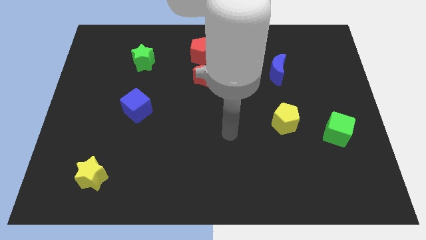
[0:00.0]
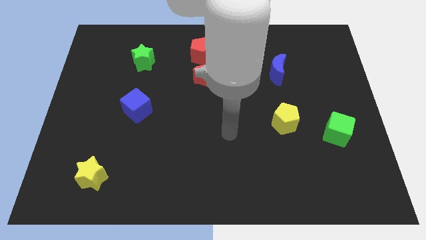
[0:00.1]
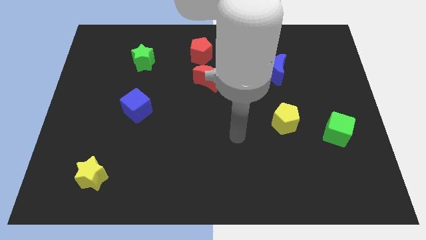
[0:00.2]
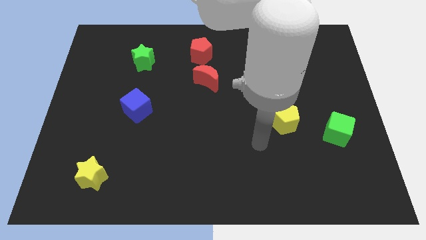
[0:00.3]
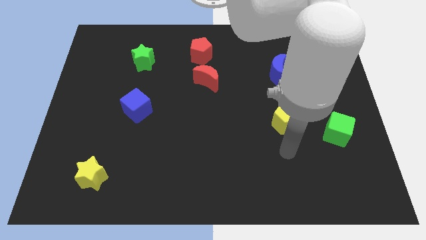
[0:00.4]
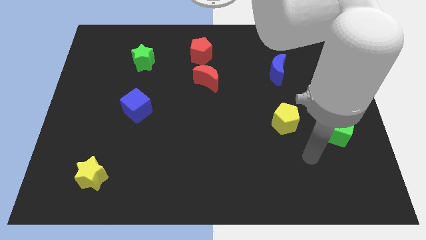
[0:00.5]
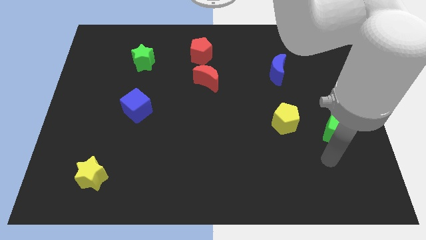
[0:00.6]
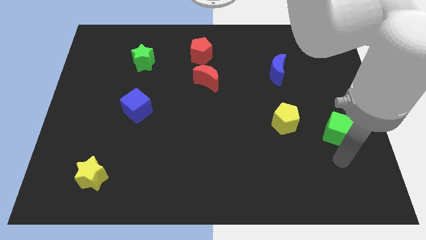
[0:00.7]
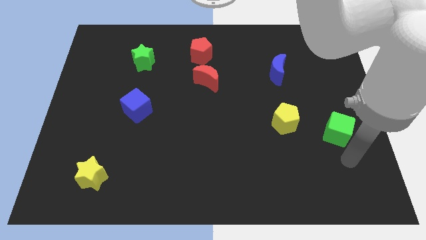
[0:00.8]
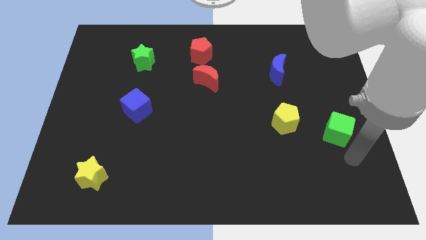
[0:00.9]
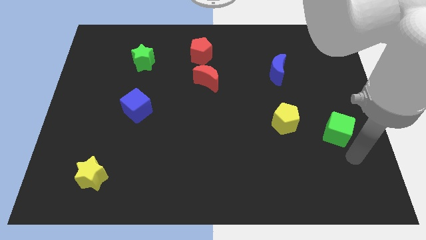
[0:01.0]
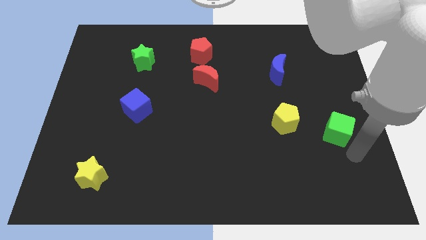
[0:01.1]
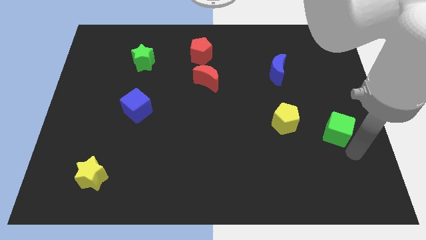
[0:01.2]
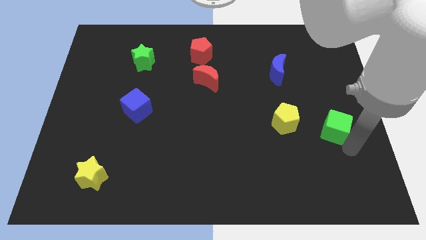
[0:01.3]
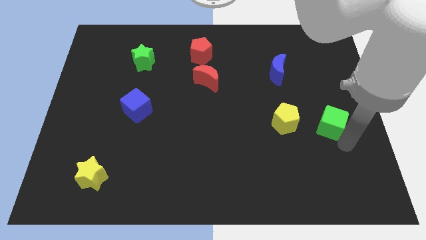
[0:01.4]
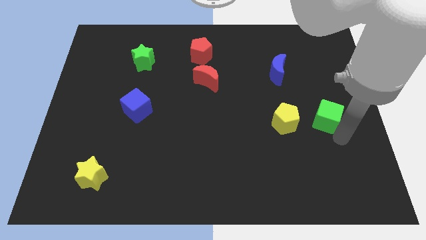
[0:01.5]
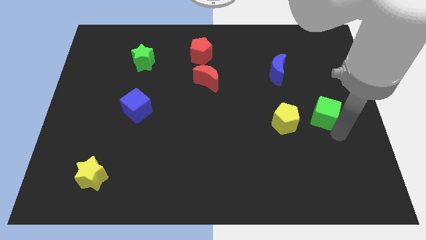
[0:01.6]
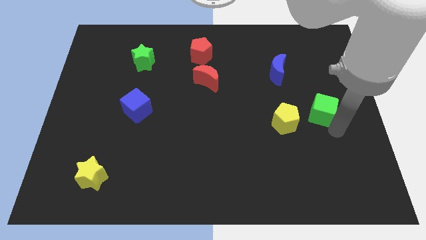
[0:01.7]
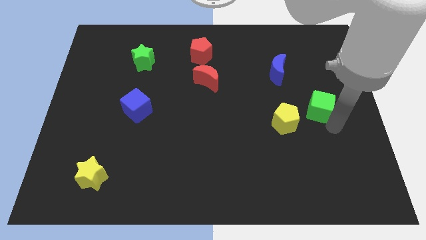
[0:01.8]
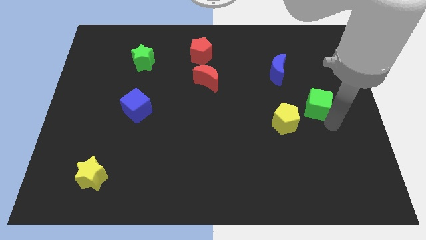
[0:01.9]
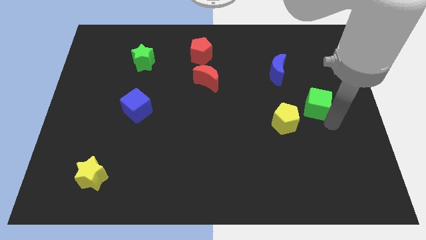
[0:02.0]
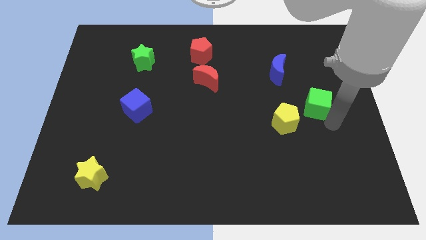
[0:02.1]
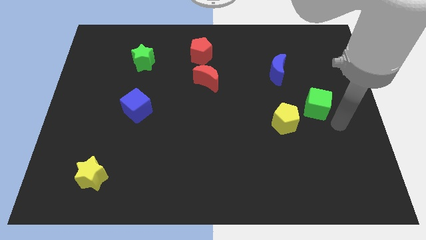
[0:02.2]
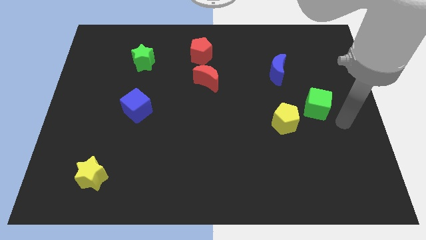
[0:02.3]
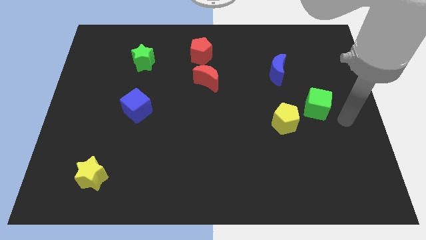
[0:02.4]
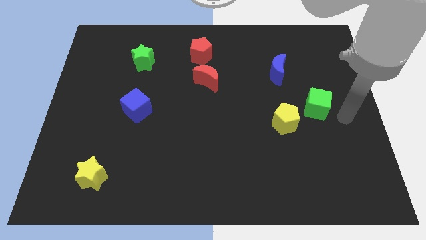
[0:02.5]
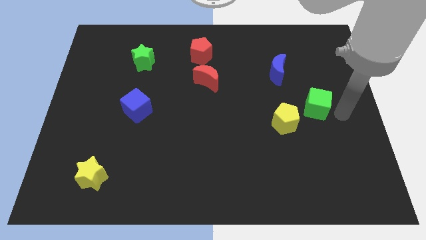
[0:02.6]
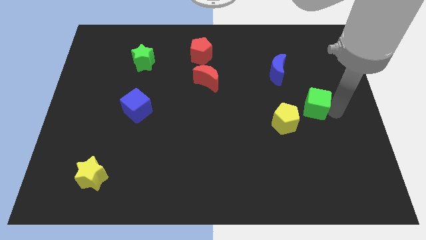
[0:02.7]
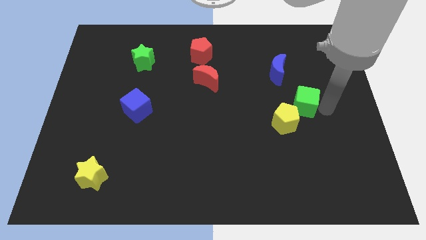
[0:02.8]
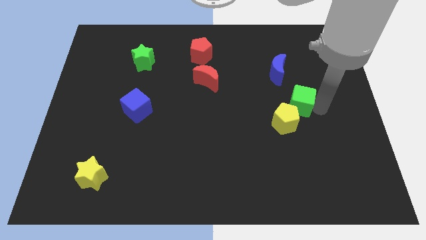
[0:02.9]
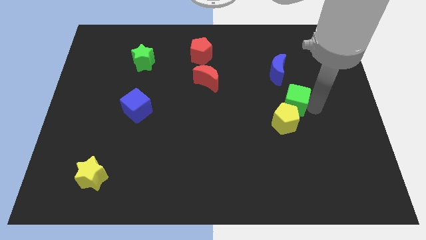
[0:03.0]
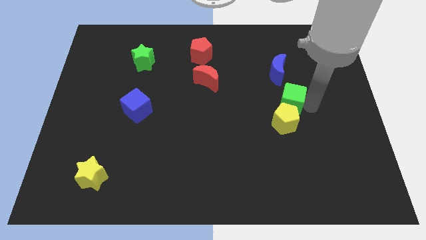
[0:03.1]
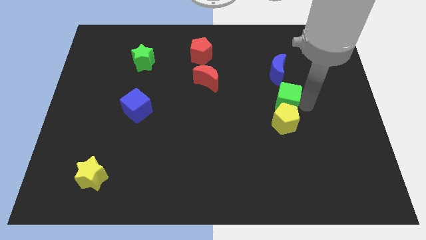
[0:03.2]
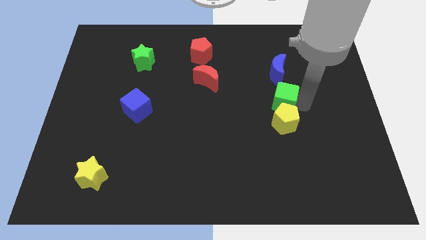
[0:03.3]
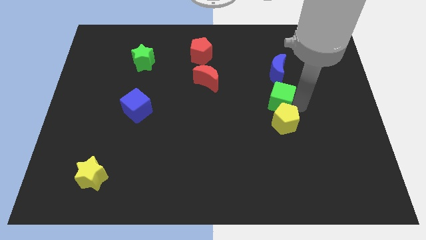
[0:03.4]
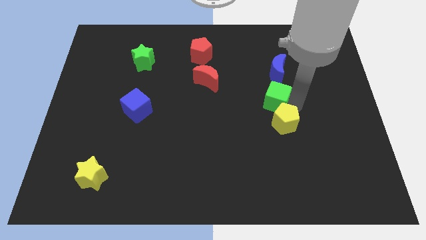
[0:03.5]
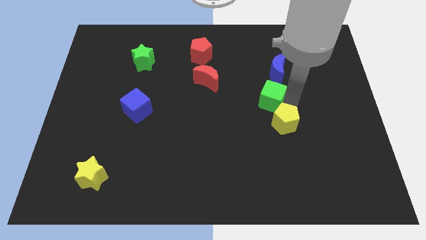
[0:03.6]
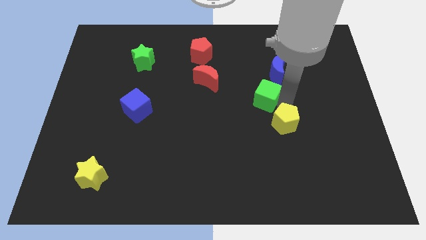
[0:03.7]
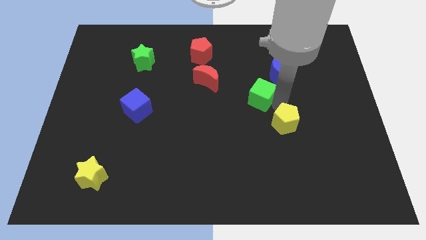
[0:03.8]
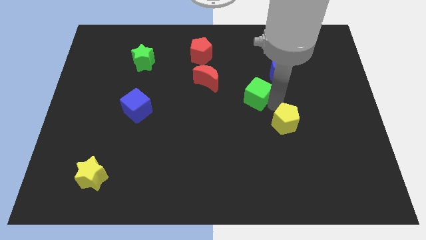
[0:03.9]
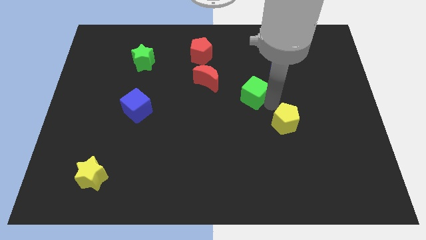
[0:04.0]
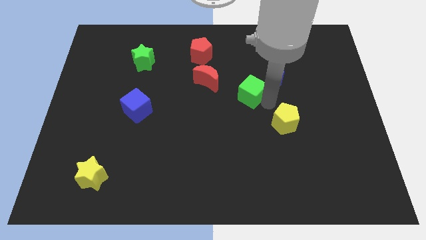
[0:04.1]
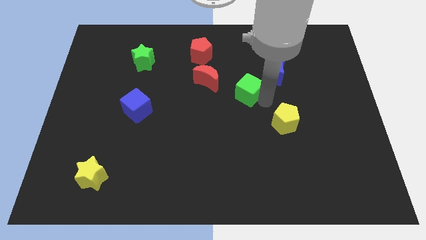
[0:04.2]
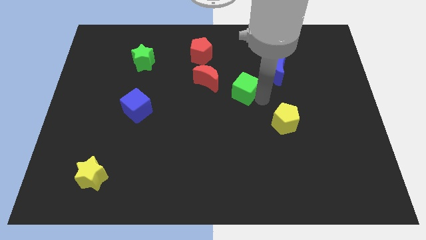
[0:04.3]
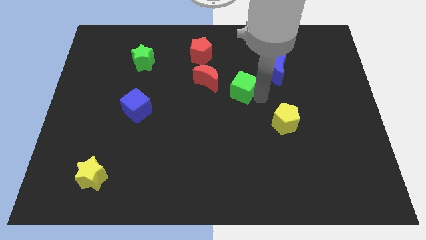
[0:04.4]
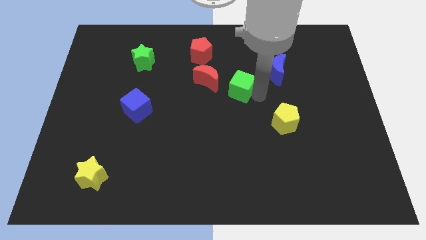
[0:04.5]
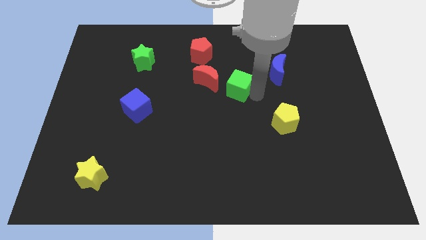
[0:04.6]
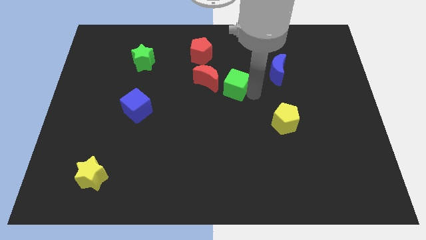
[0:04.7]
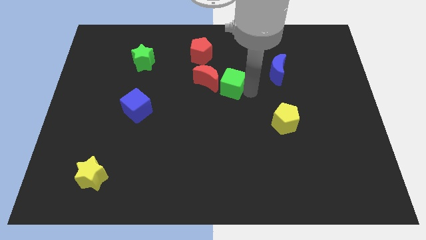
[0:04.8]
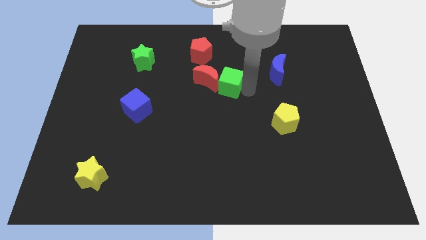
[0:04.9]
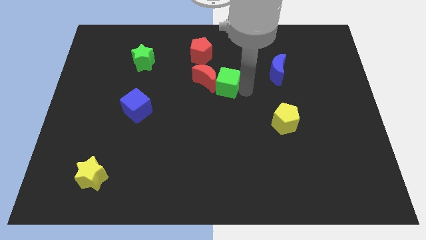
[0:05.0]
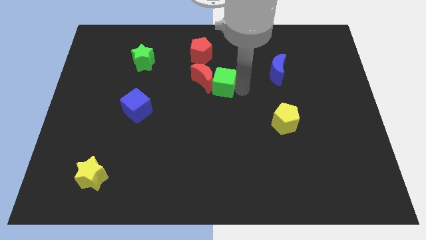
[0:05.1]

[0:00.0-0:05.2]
put the green cube towards the red moon

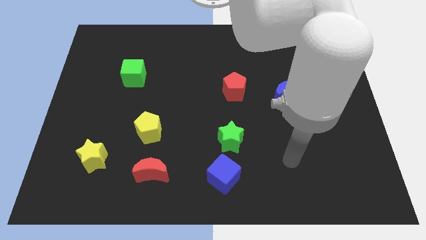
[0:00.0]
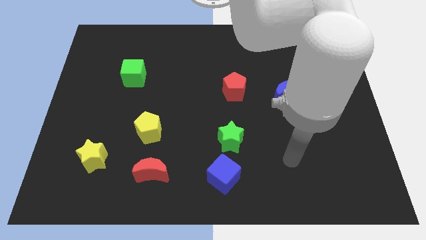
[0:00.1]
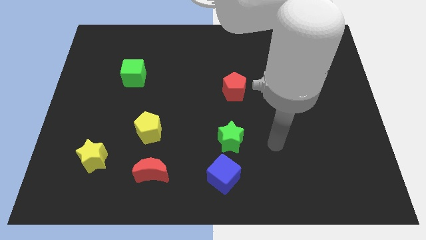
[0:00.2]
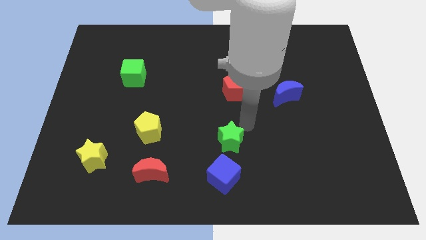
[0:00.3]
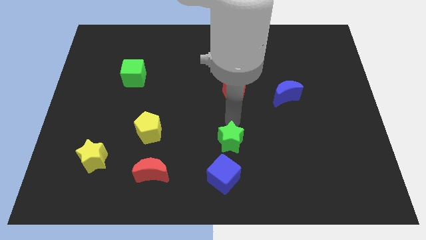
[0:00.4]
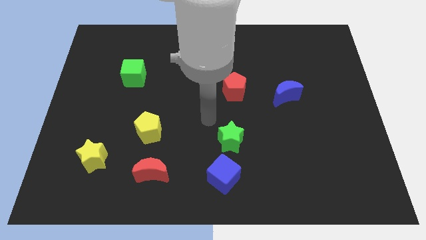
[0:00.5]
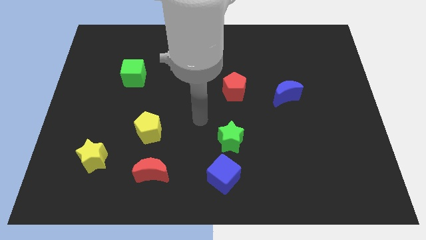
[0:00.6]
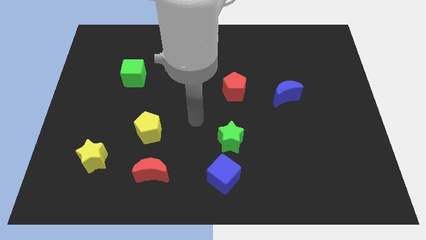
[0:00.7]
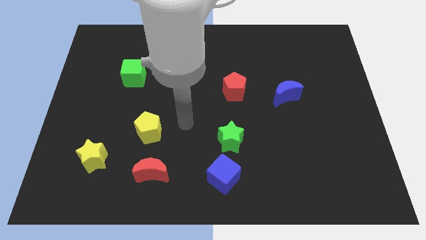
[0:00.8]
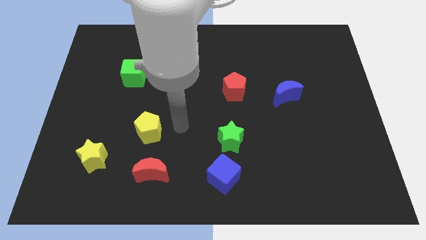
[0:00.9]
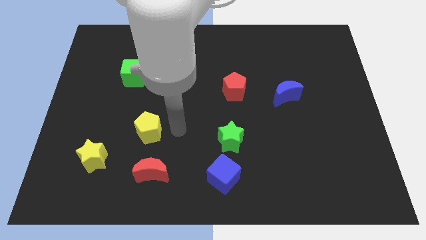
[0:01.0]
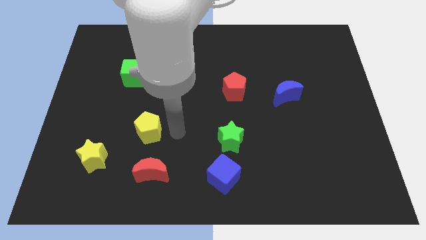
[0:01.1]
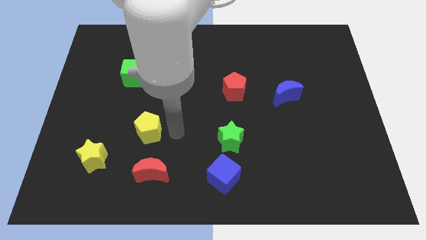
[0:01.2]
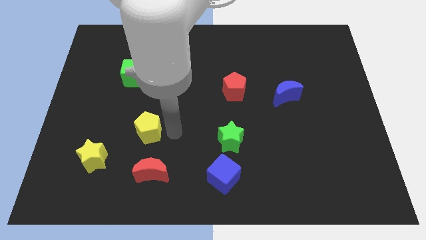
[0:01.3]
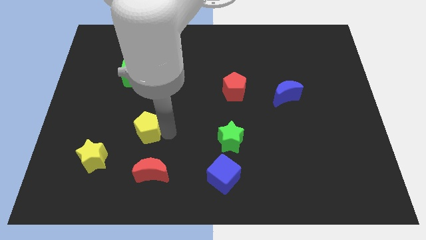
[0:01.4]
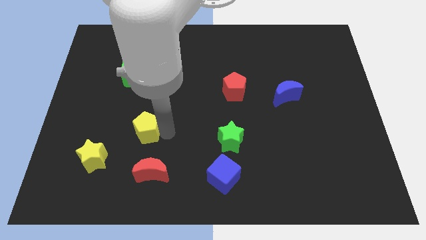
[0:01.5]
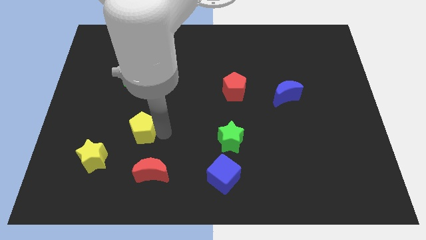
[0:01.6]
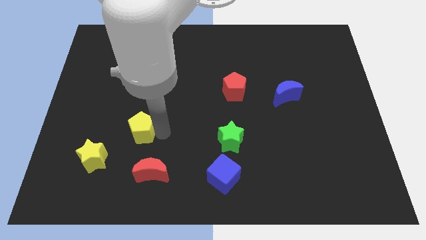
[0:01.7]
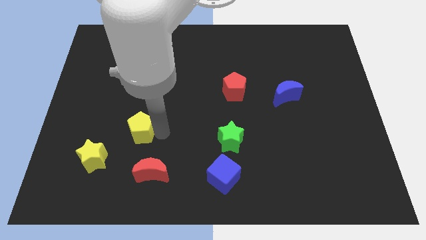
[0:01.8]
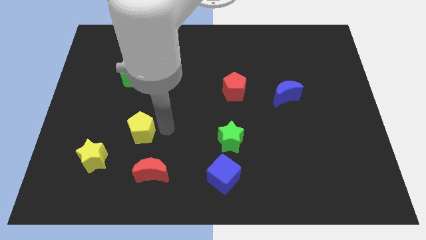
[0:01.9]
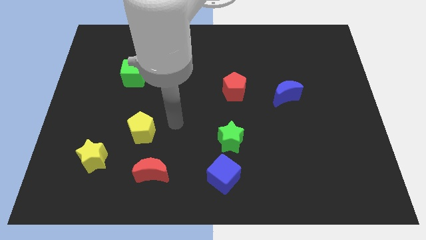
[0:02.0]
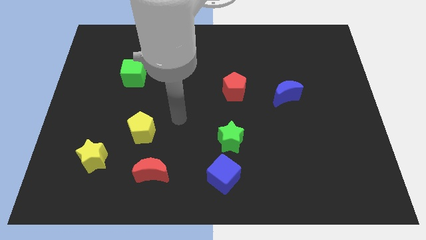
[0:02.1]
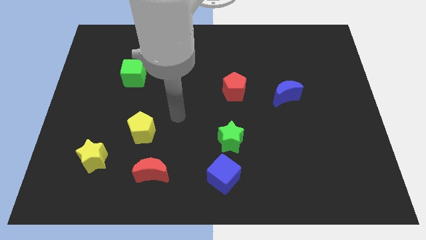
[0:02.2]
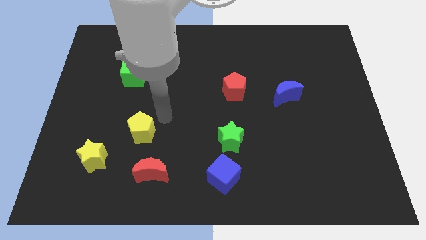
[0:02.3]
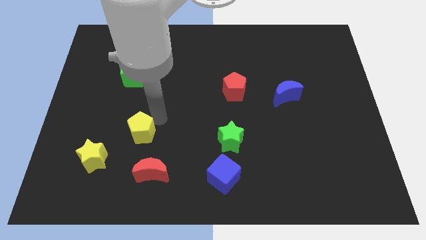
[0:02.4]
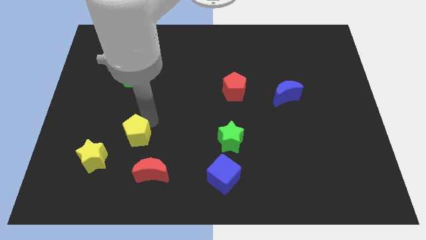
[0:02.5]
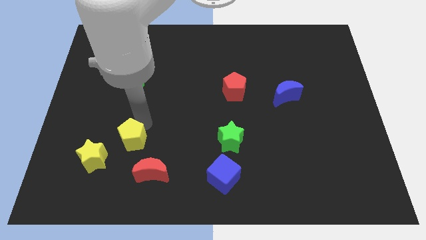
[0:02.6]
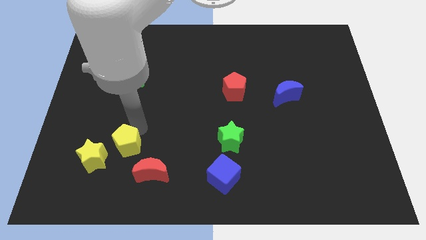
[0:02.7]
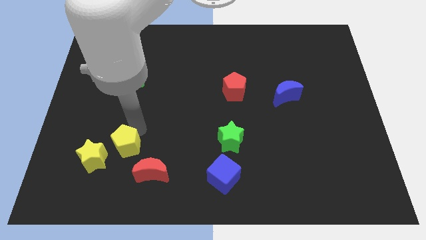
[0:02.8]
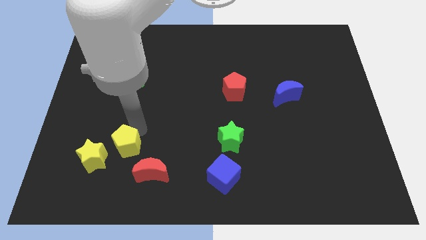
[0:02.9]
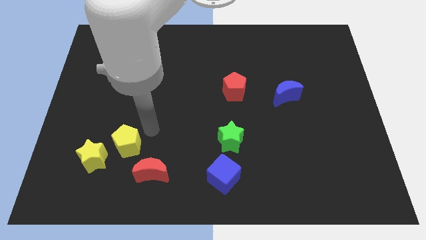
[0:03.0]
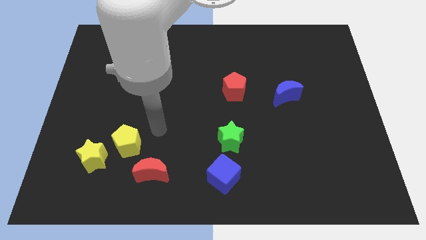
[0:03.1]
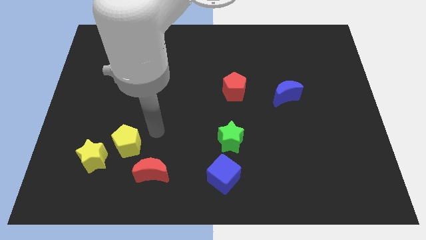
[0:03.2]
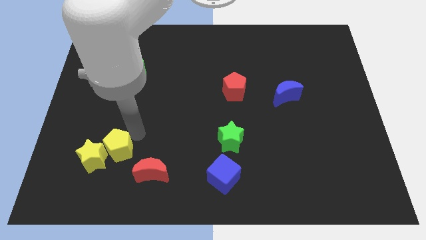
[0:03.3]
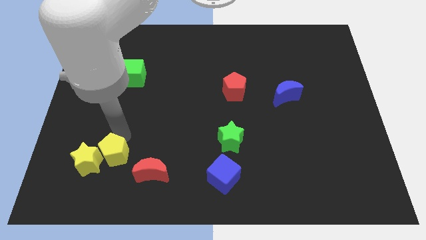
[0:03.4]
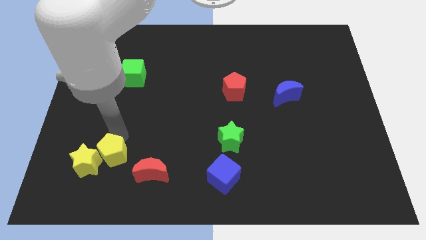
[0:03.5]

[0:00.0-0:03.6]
put the yellow pentagon close to the yellow star
